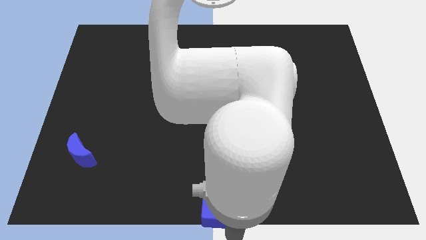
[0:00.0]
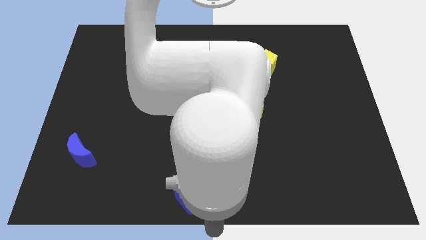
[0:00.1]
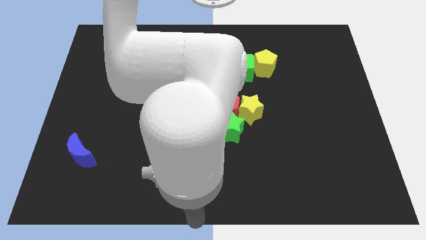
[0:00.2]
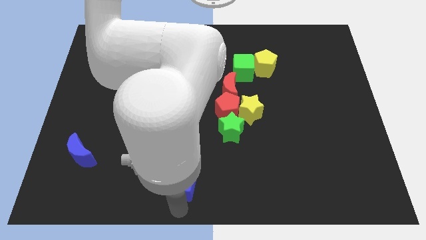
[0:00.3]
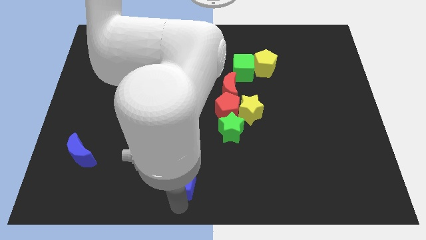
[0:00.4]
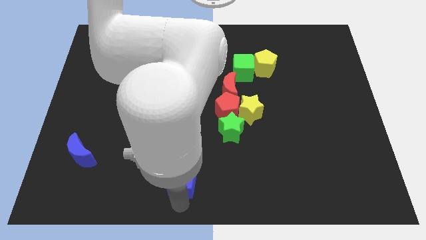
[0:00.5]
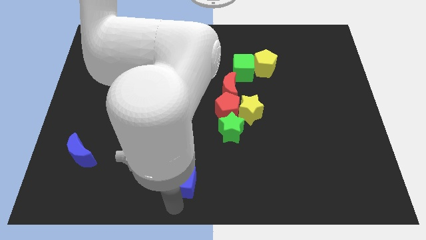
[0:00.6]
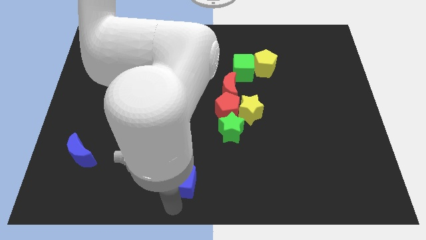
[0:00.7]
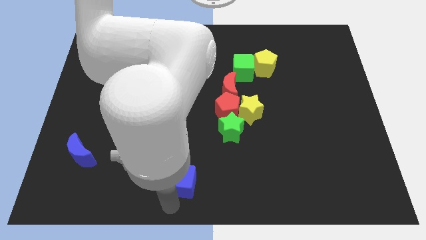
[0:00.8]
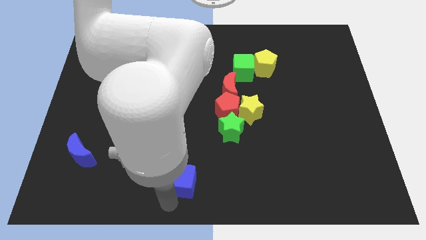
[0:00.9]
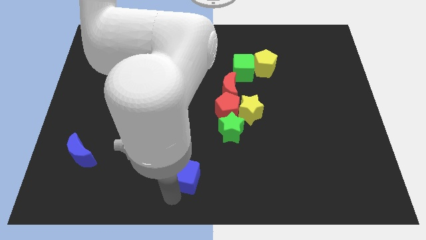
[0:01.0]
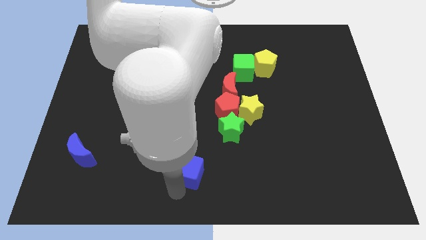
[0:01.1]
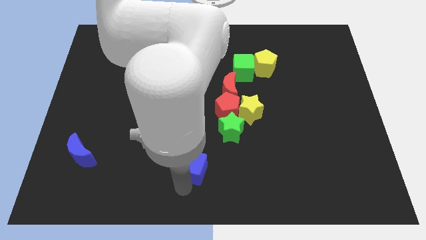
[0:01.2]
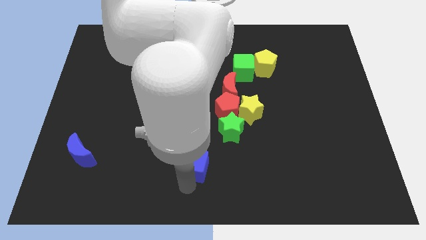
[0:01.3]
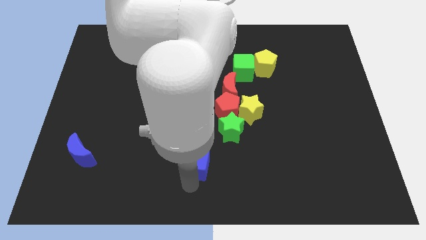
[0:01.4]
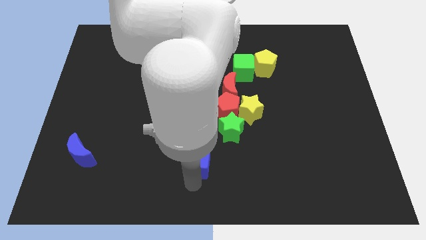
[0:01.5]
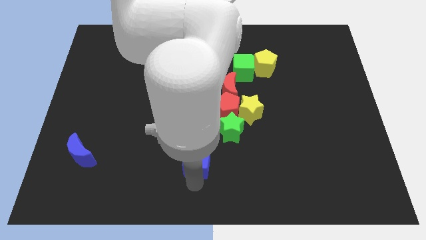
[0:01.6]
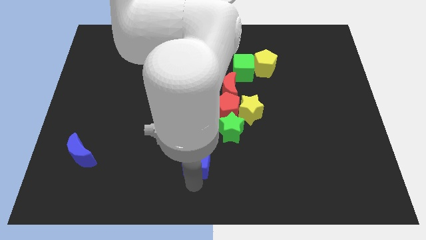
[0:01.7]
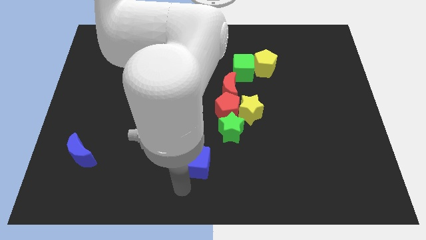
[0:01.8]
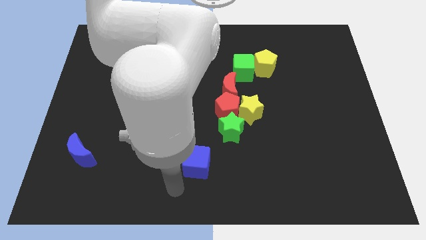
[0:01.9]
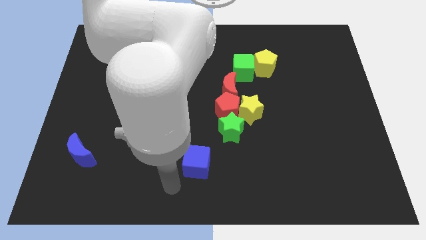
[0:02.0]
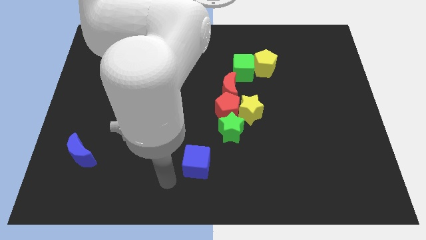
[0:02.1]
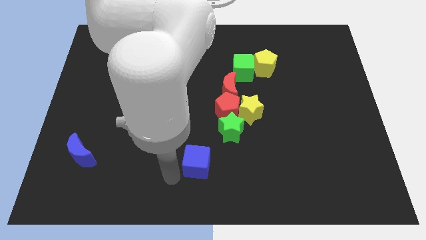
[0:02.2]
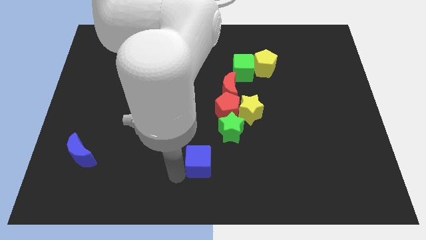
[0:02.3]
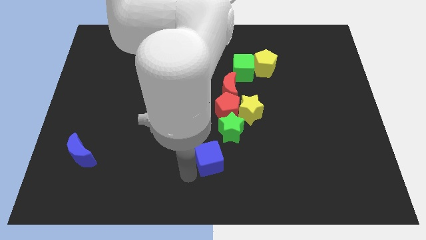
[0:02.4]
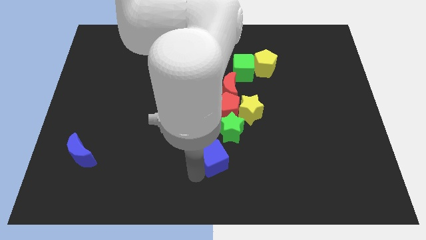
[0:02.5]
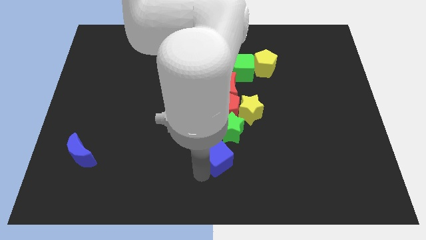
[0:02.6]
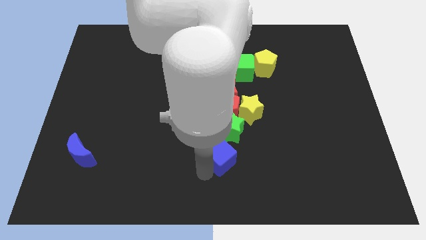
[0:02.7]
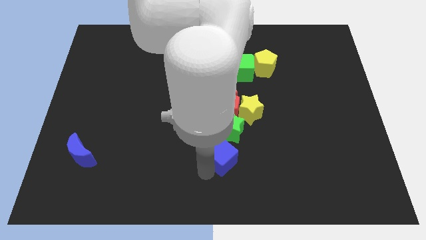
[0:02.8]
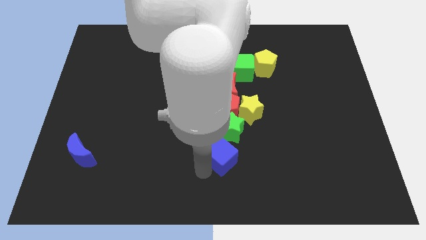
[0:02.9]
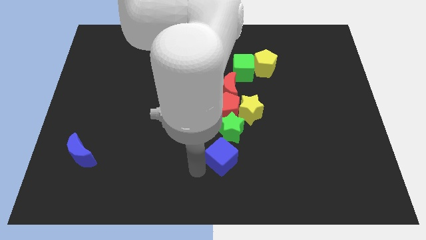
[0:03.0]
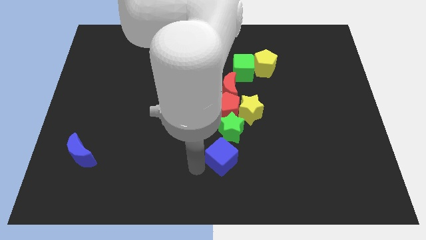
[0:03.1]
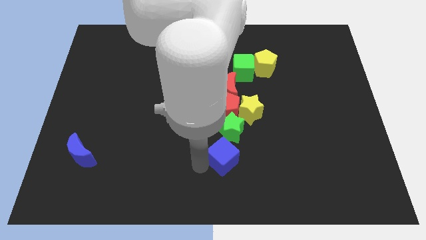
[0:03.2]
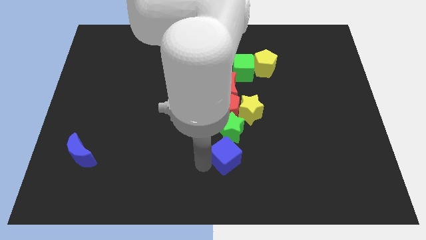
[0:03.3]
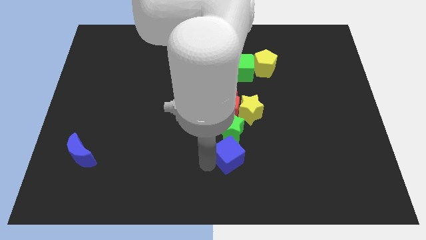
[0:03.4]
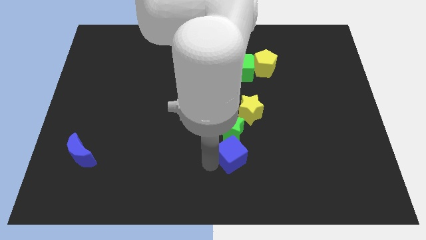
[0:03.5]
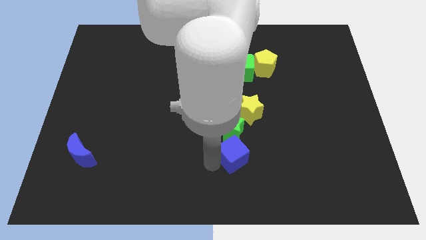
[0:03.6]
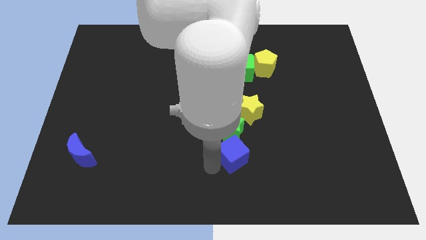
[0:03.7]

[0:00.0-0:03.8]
place the blue cube below the green star

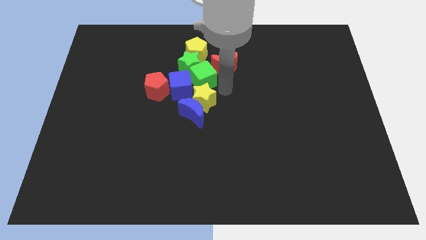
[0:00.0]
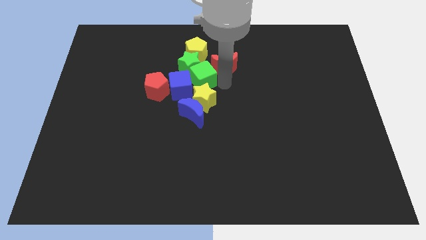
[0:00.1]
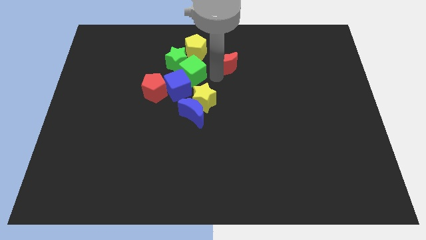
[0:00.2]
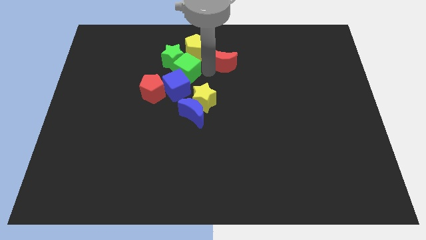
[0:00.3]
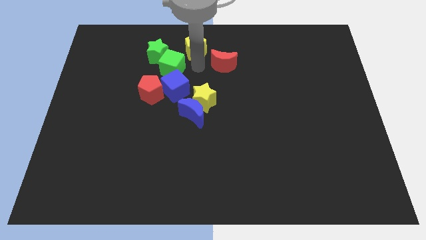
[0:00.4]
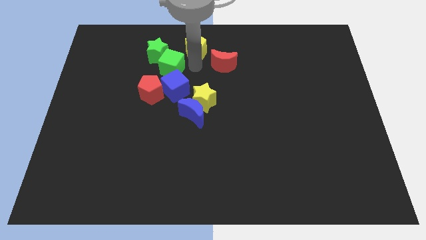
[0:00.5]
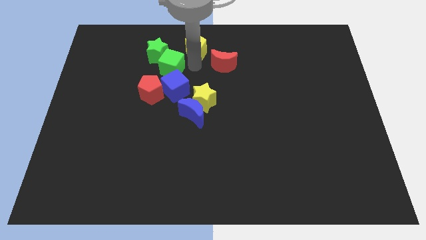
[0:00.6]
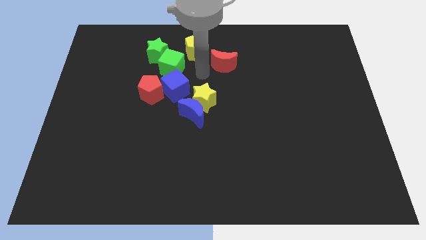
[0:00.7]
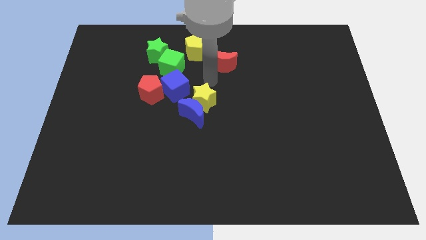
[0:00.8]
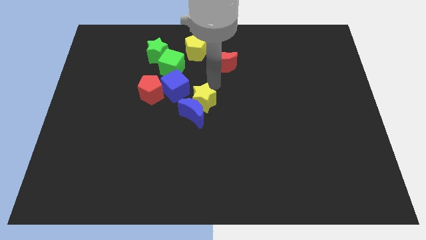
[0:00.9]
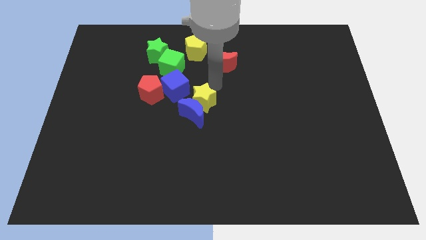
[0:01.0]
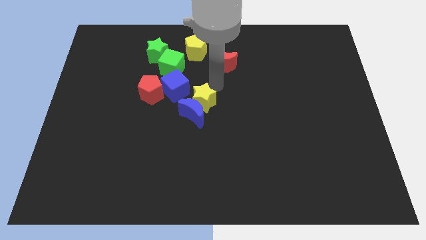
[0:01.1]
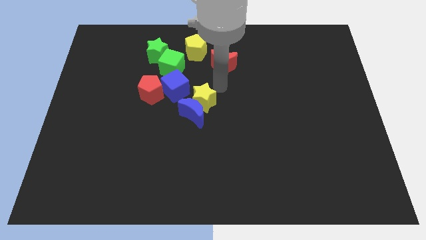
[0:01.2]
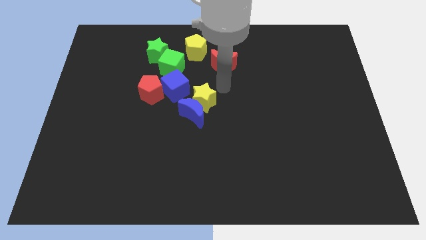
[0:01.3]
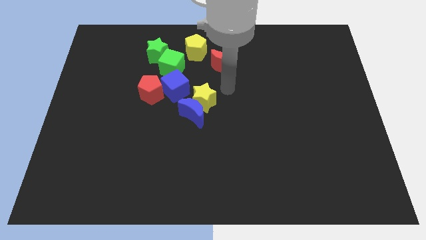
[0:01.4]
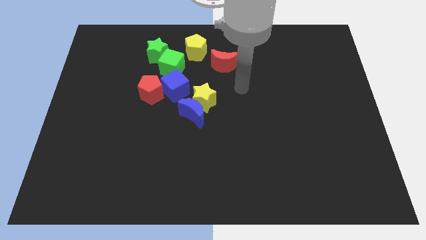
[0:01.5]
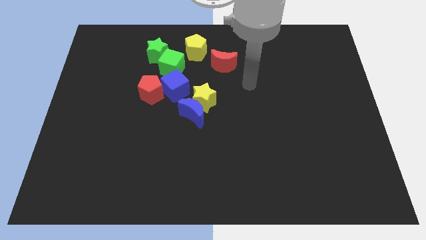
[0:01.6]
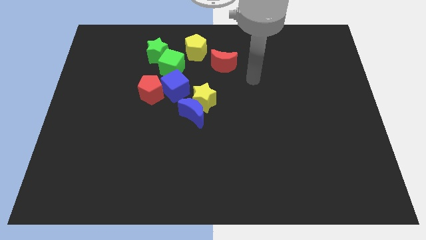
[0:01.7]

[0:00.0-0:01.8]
place the green cube above the blue cube

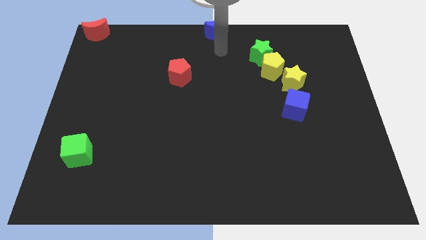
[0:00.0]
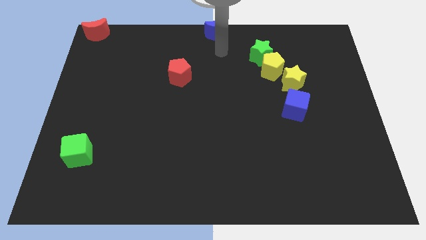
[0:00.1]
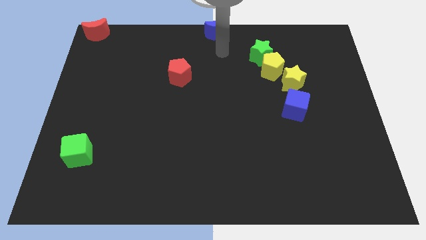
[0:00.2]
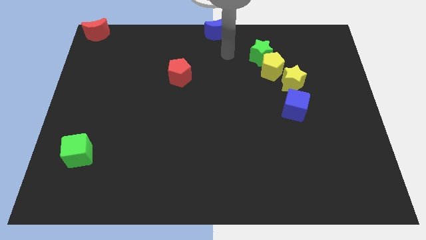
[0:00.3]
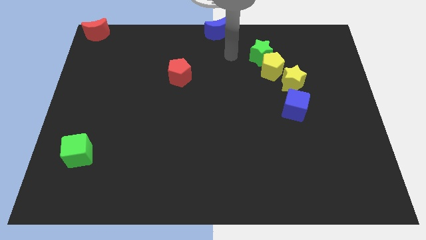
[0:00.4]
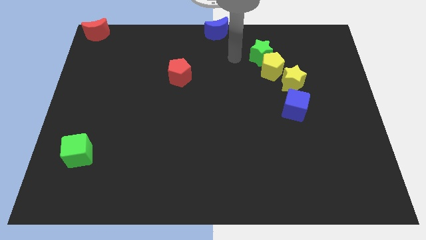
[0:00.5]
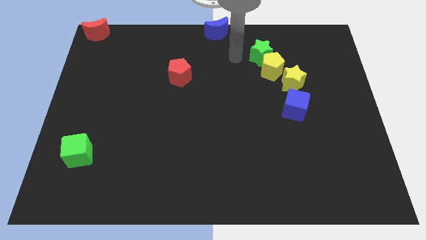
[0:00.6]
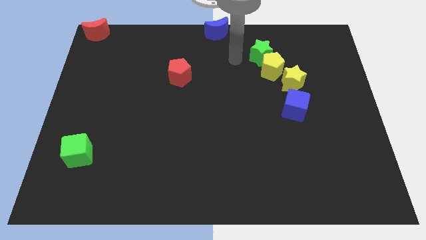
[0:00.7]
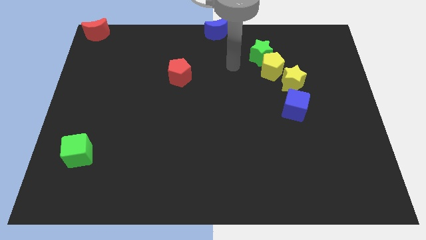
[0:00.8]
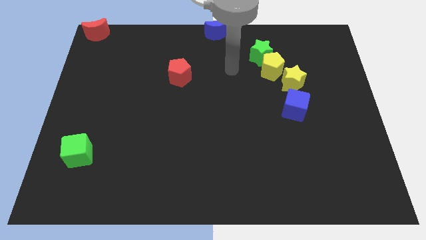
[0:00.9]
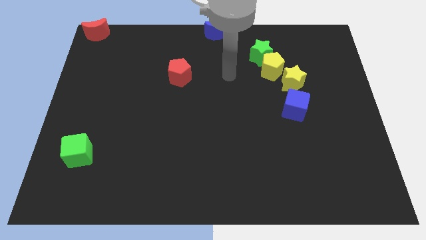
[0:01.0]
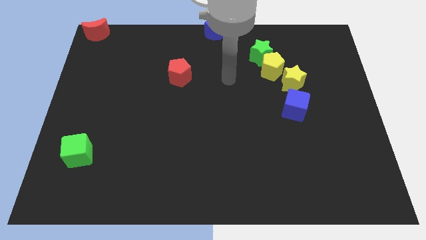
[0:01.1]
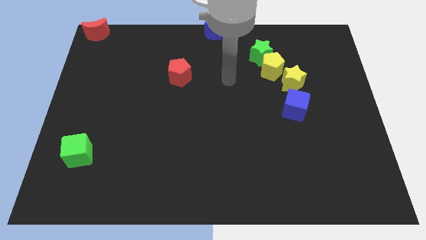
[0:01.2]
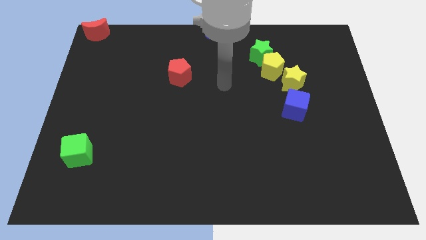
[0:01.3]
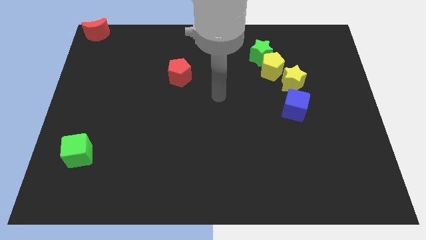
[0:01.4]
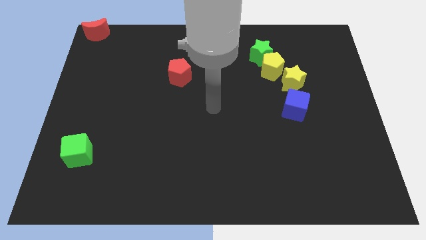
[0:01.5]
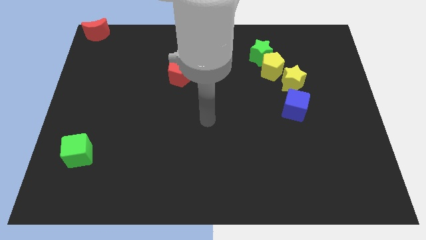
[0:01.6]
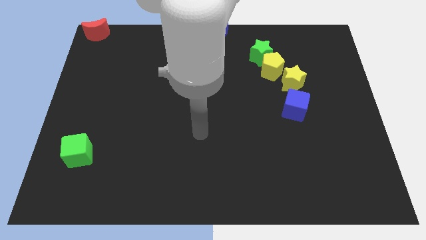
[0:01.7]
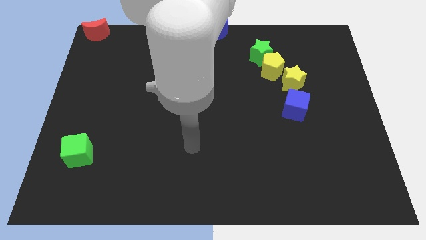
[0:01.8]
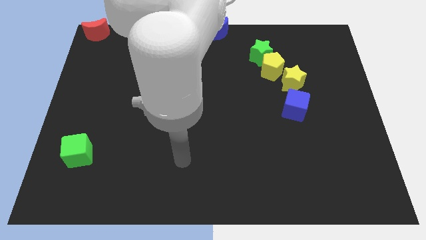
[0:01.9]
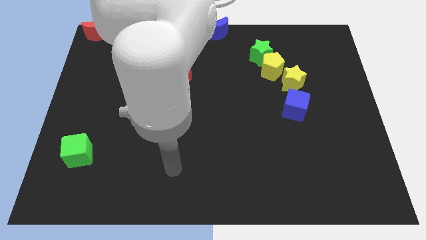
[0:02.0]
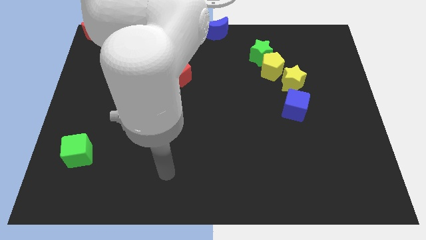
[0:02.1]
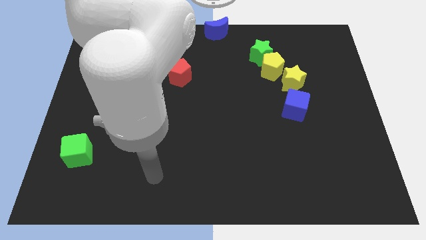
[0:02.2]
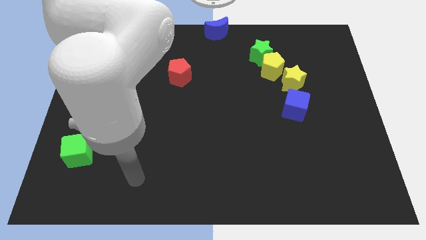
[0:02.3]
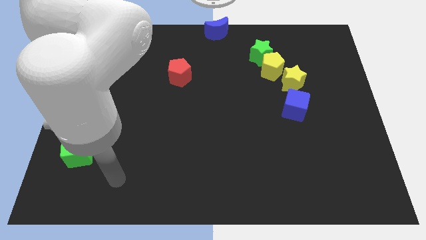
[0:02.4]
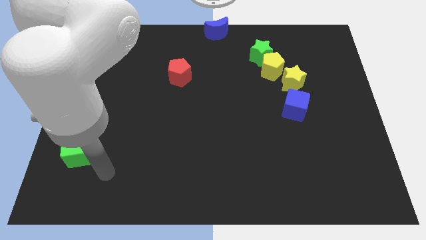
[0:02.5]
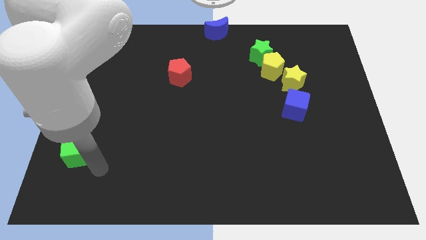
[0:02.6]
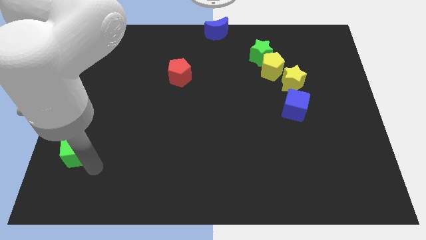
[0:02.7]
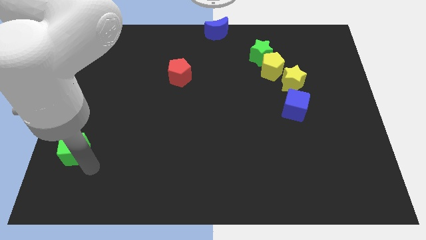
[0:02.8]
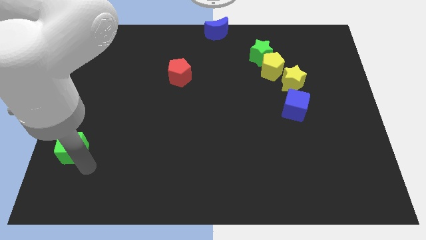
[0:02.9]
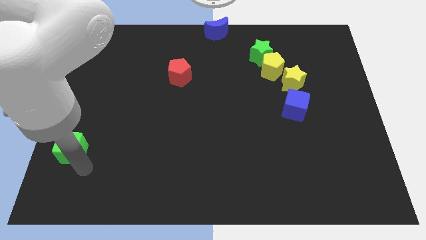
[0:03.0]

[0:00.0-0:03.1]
push the green cube slightly up

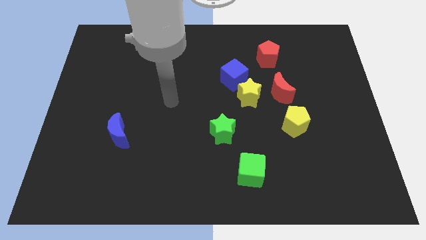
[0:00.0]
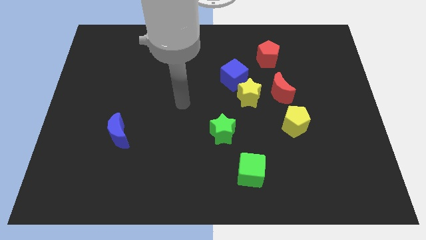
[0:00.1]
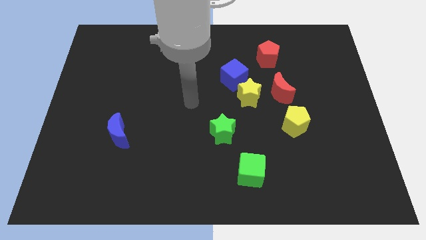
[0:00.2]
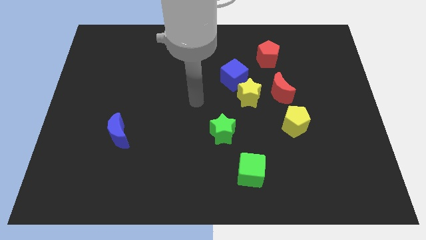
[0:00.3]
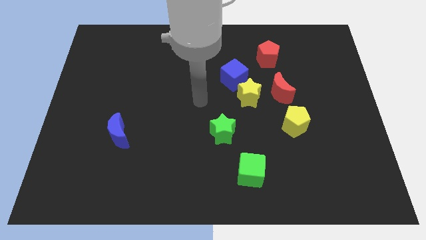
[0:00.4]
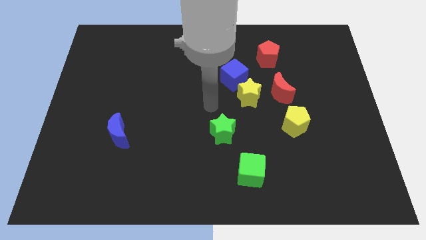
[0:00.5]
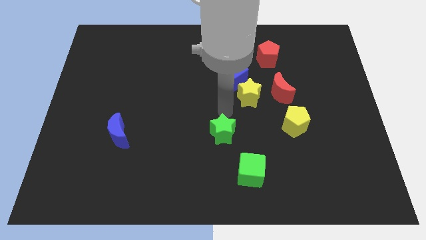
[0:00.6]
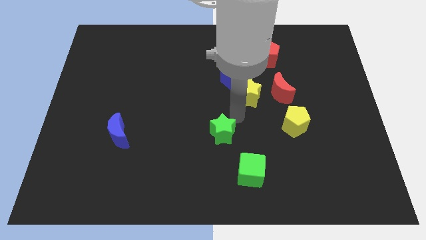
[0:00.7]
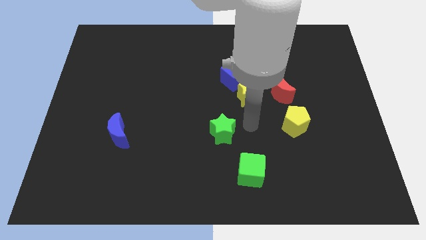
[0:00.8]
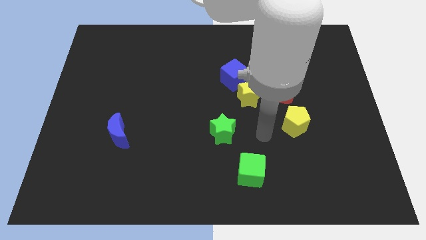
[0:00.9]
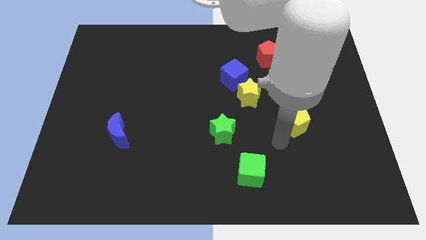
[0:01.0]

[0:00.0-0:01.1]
slide your arm in between green cube and yellow pentagon
